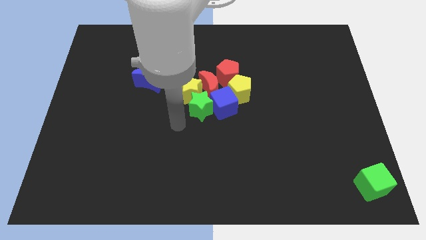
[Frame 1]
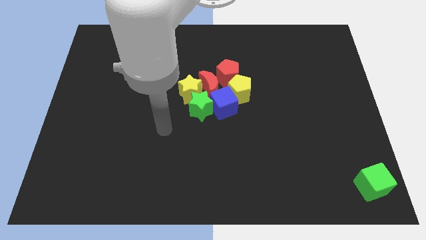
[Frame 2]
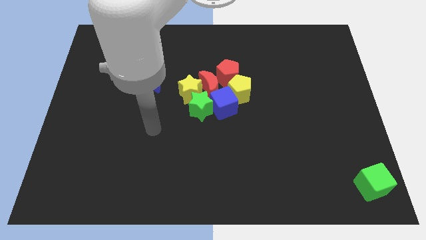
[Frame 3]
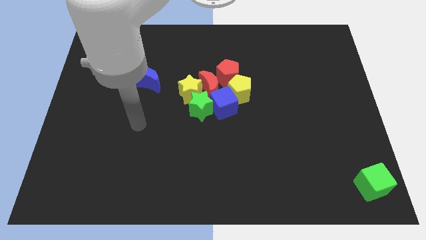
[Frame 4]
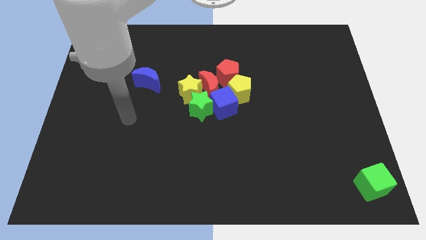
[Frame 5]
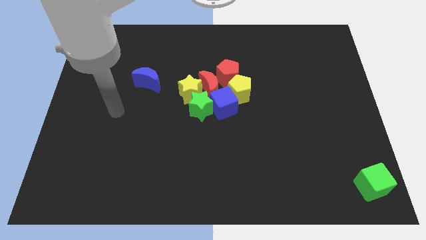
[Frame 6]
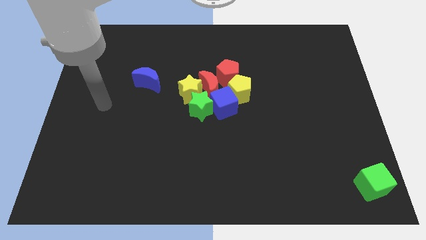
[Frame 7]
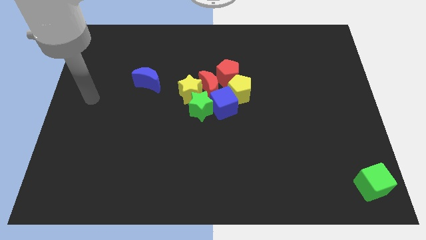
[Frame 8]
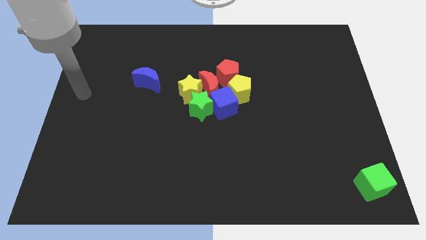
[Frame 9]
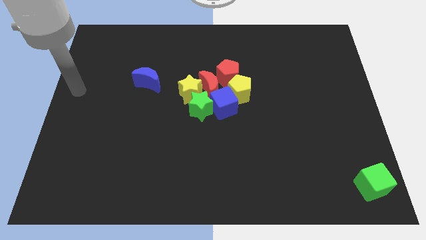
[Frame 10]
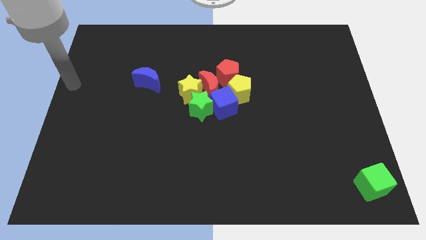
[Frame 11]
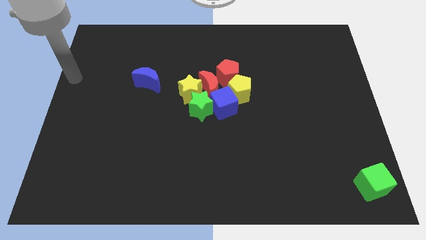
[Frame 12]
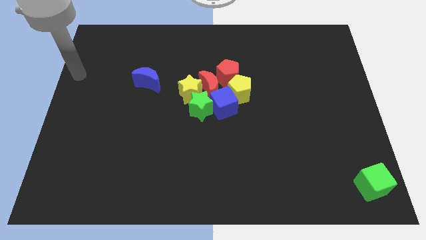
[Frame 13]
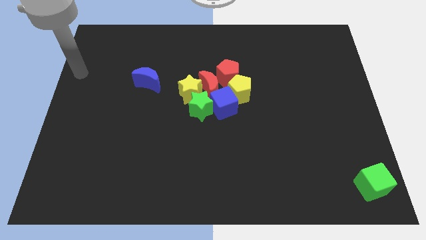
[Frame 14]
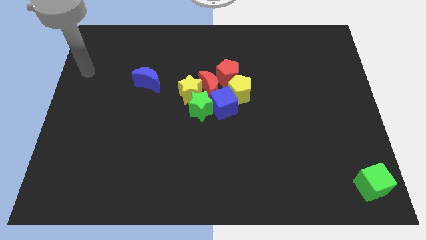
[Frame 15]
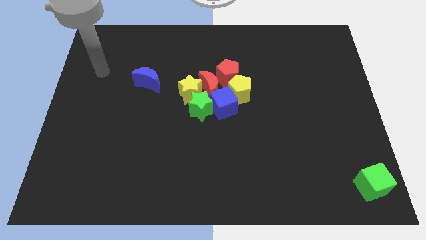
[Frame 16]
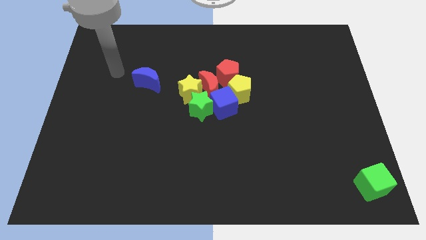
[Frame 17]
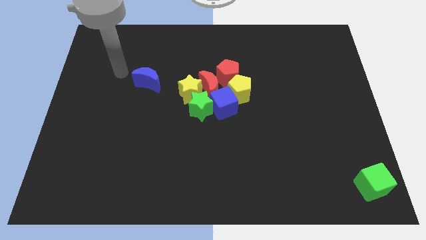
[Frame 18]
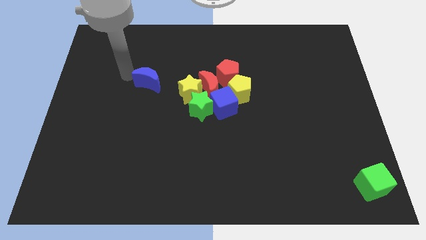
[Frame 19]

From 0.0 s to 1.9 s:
point your arm to the left side of blue moon

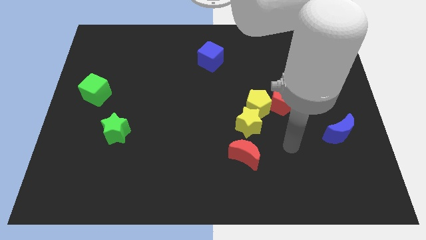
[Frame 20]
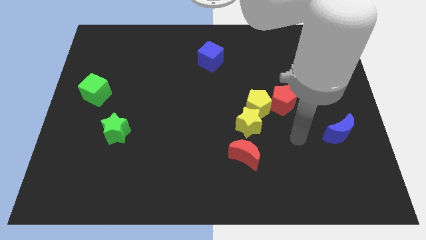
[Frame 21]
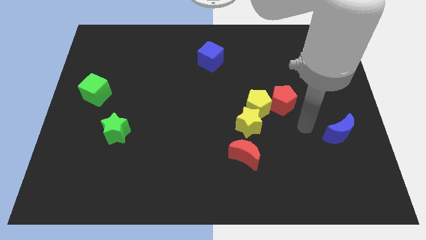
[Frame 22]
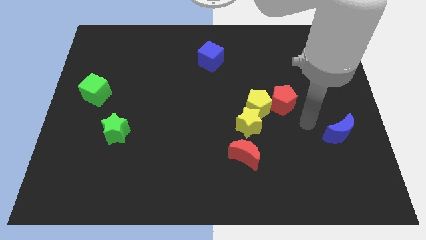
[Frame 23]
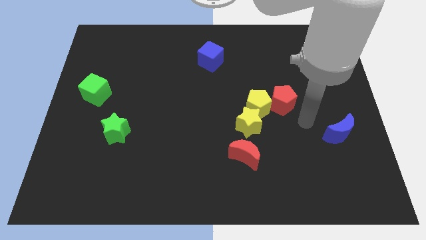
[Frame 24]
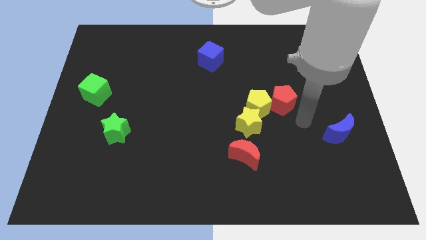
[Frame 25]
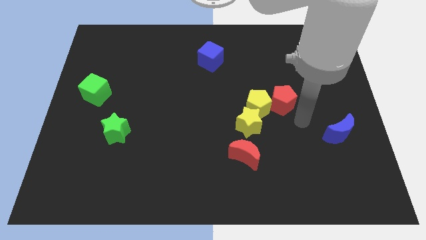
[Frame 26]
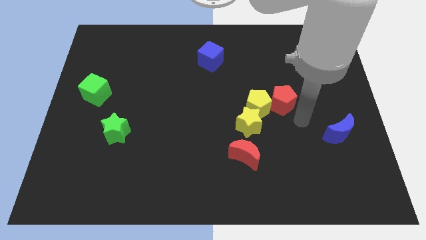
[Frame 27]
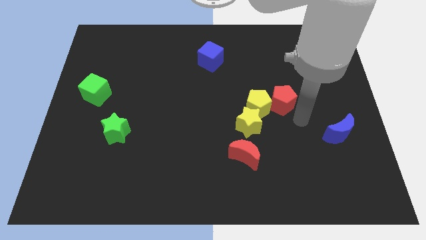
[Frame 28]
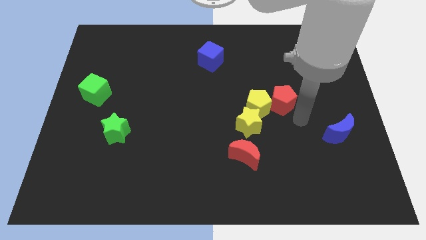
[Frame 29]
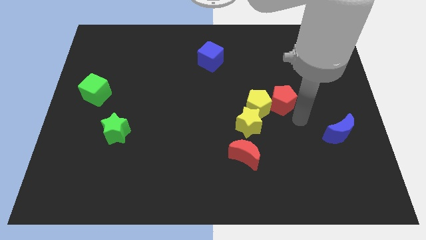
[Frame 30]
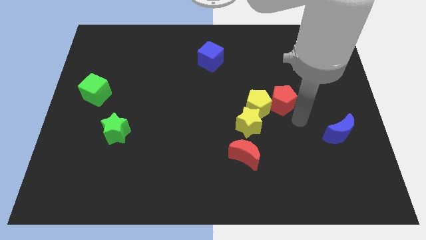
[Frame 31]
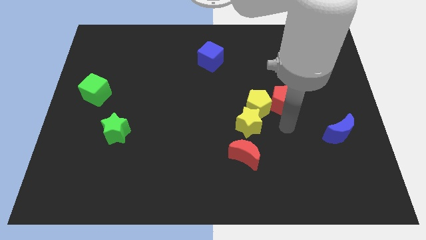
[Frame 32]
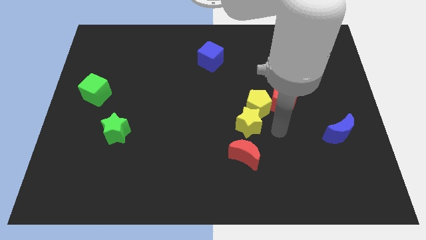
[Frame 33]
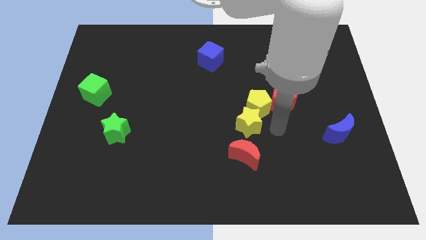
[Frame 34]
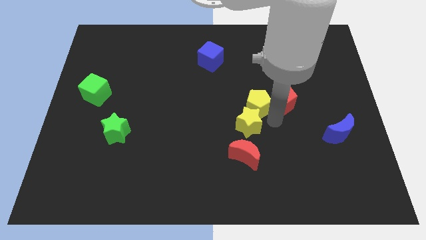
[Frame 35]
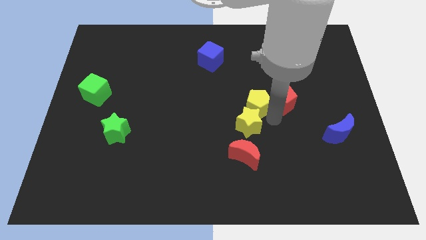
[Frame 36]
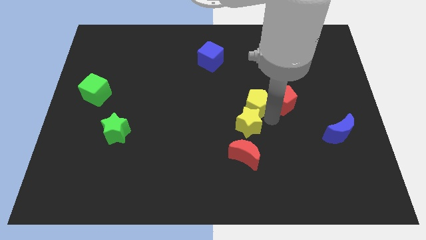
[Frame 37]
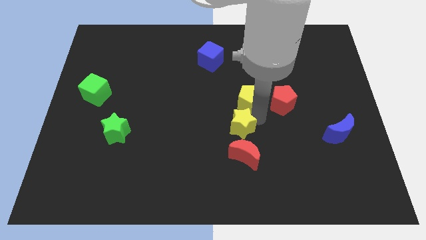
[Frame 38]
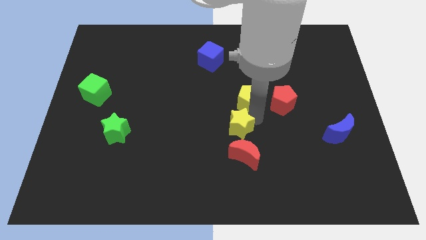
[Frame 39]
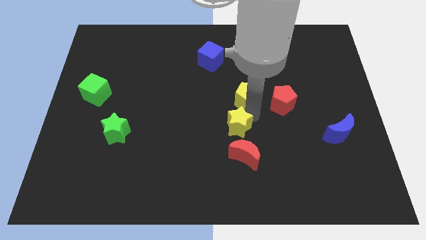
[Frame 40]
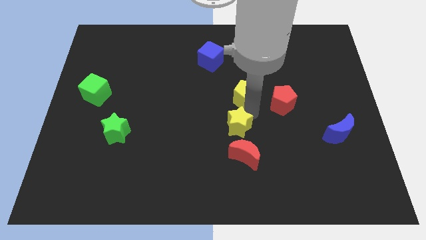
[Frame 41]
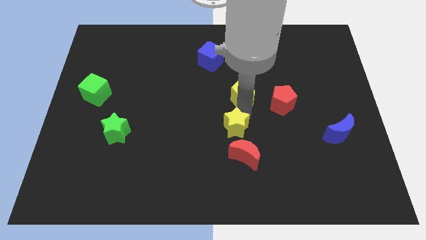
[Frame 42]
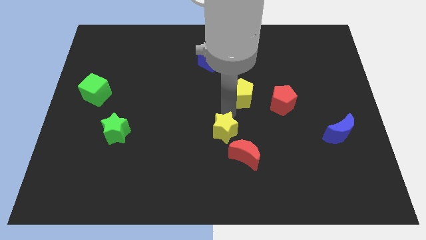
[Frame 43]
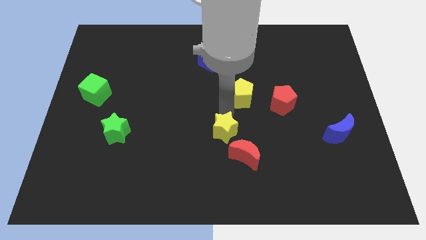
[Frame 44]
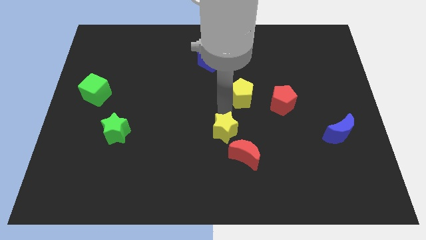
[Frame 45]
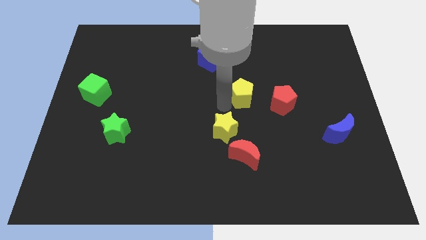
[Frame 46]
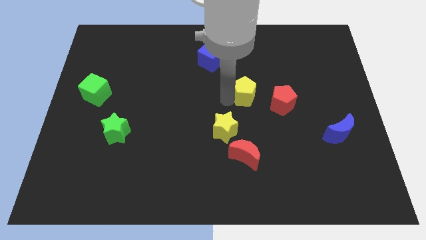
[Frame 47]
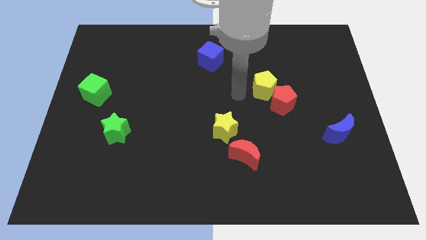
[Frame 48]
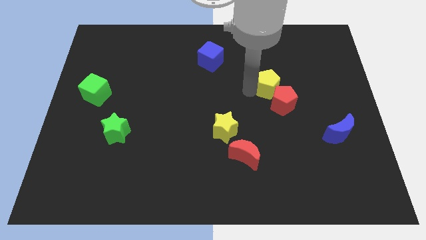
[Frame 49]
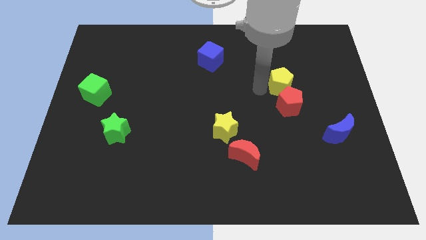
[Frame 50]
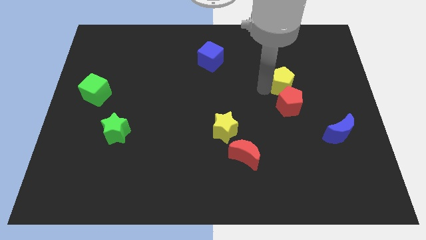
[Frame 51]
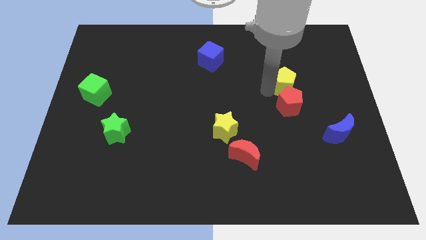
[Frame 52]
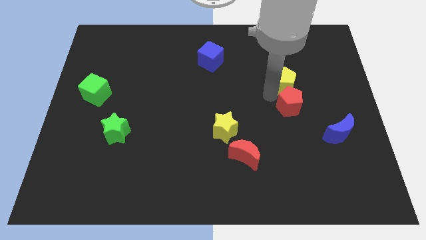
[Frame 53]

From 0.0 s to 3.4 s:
move the yellow pentagon to the top side of the red pentagon

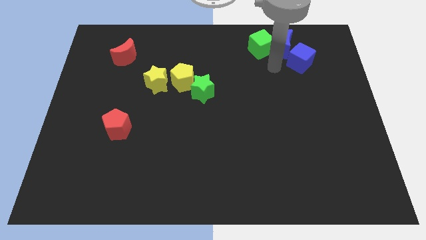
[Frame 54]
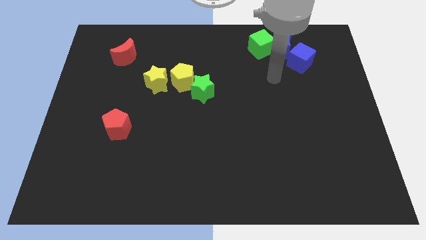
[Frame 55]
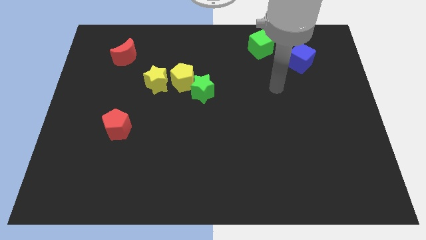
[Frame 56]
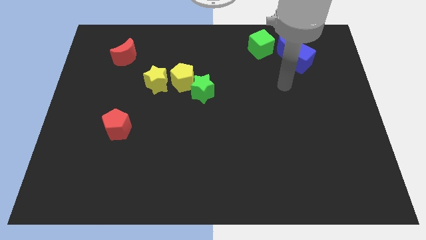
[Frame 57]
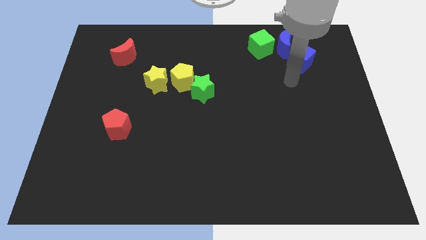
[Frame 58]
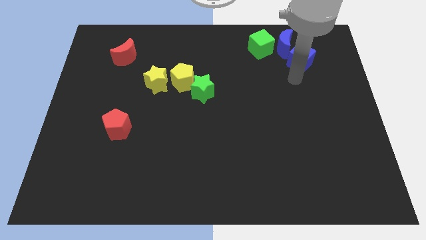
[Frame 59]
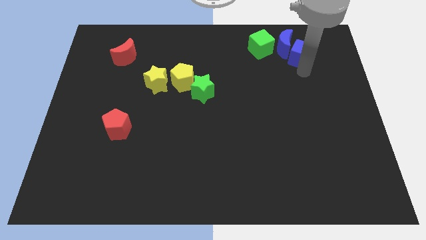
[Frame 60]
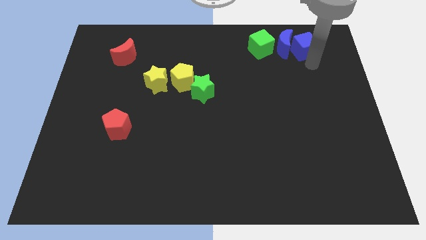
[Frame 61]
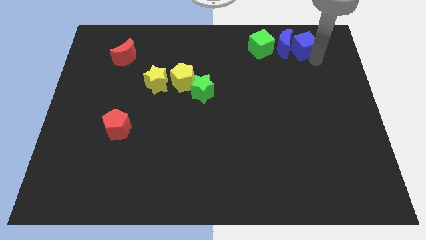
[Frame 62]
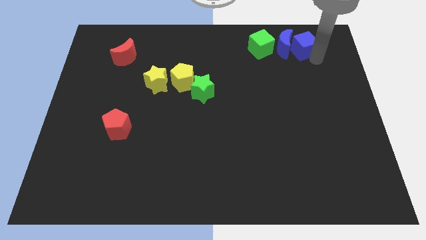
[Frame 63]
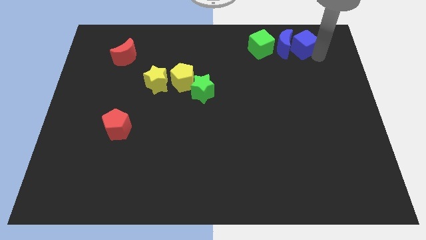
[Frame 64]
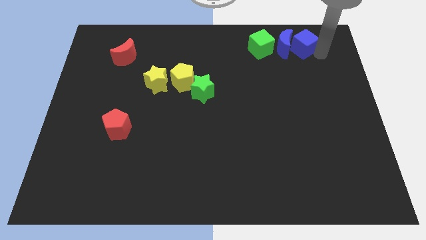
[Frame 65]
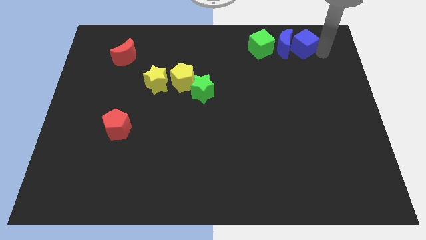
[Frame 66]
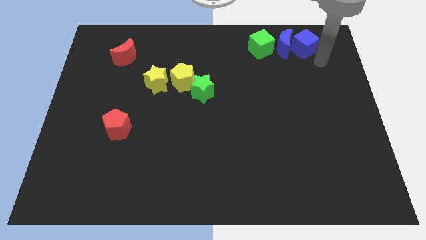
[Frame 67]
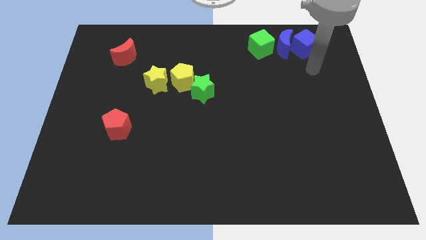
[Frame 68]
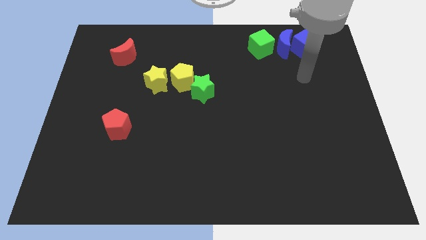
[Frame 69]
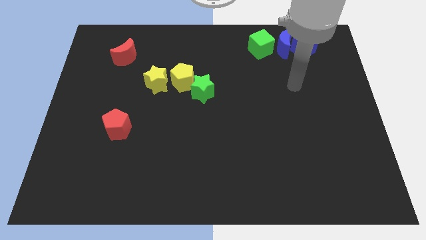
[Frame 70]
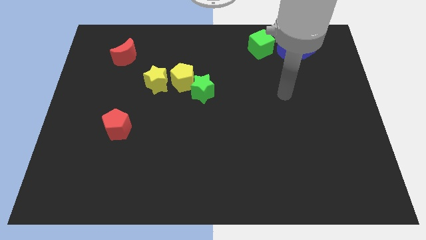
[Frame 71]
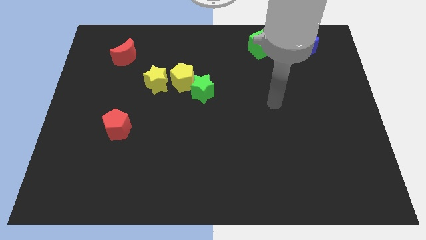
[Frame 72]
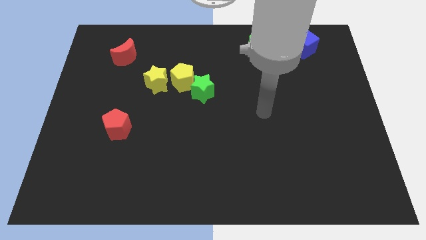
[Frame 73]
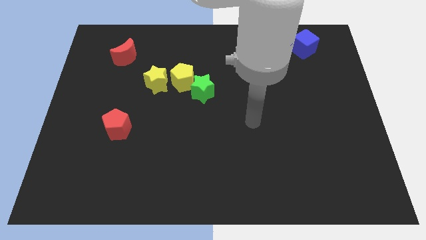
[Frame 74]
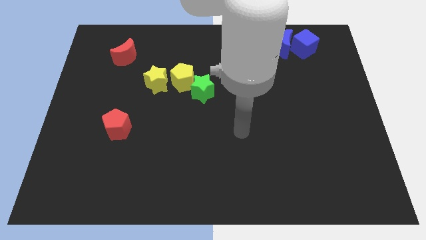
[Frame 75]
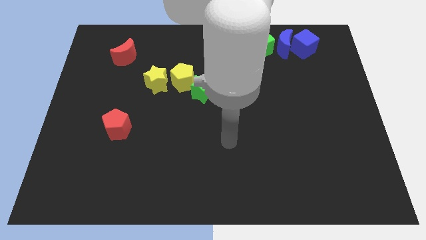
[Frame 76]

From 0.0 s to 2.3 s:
move the blue cube to the right of the blue crescent

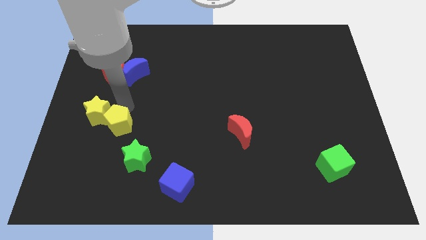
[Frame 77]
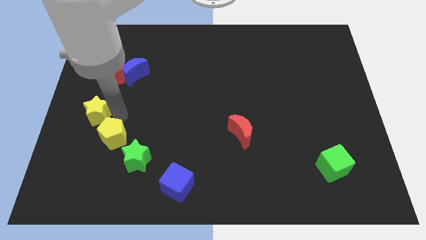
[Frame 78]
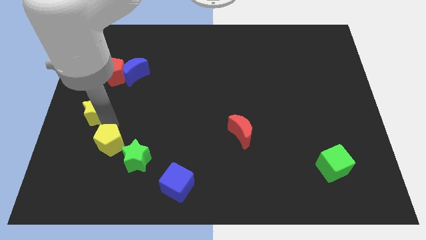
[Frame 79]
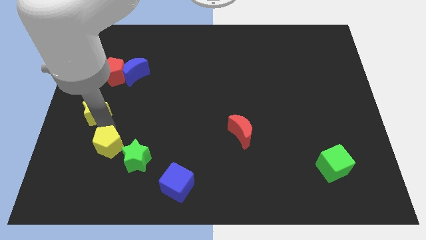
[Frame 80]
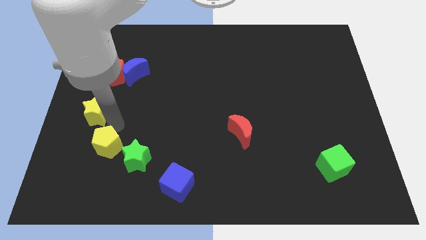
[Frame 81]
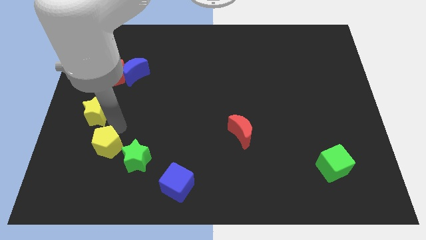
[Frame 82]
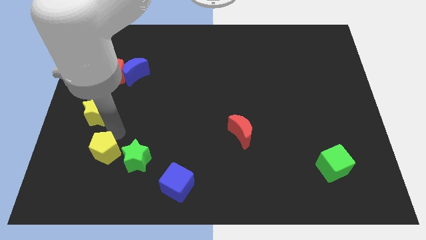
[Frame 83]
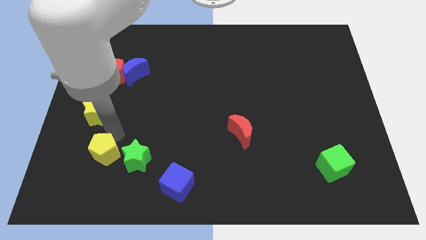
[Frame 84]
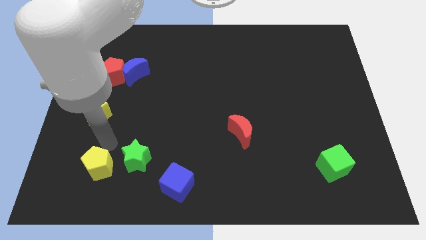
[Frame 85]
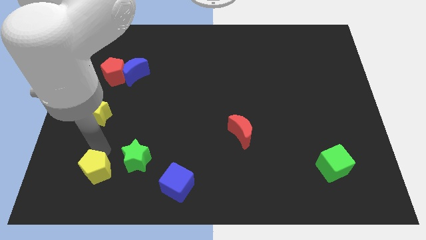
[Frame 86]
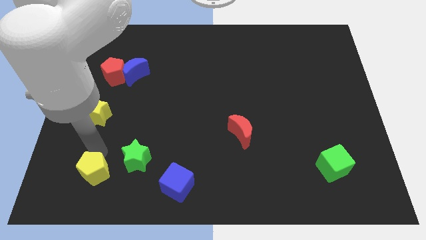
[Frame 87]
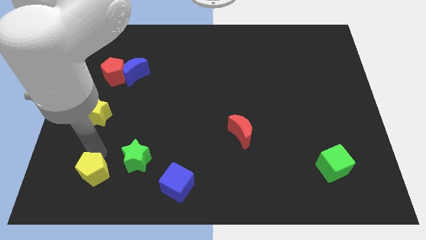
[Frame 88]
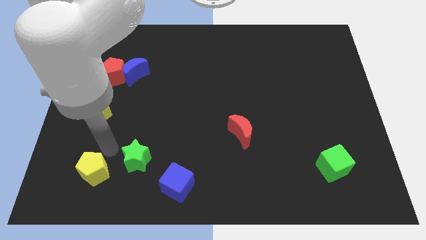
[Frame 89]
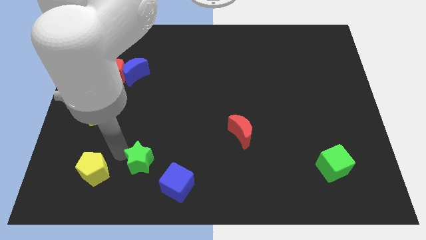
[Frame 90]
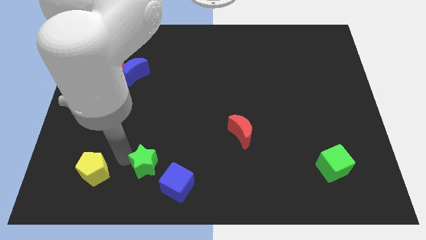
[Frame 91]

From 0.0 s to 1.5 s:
separate yellow pentagon from yellow star
